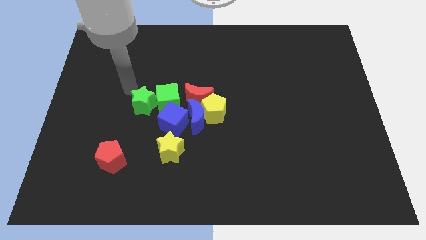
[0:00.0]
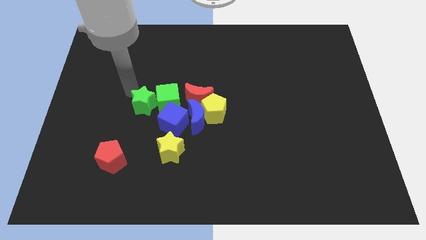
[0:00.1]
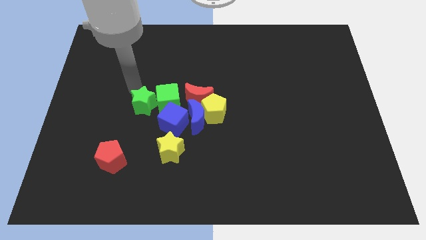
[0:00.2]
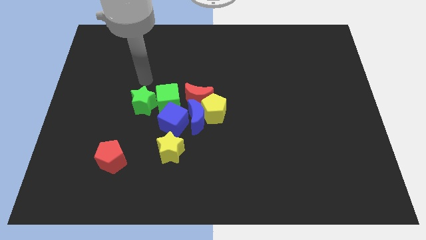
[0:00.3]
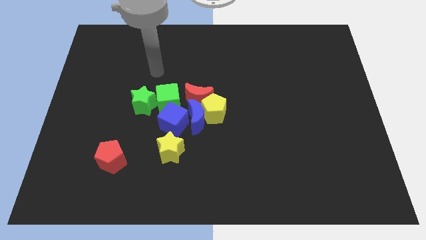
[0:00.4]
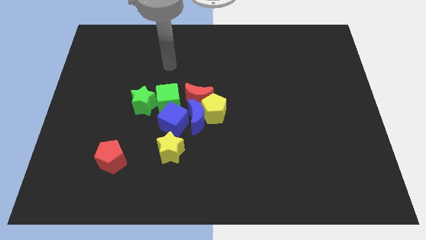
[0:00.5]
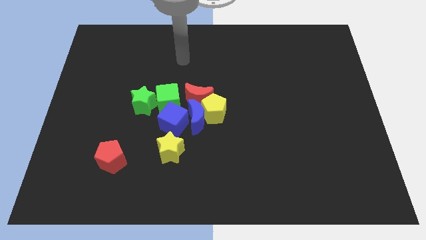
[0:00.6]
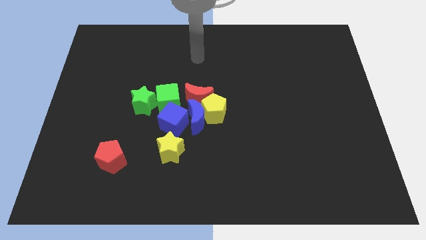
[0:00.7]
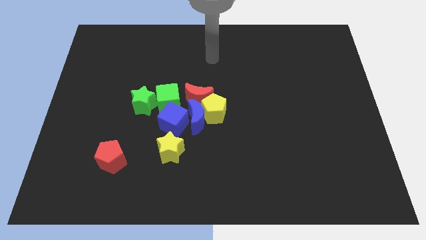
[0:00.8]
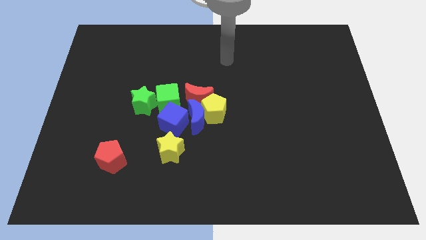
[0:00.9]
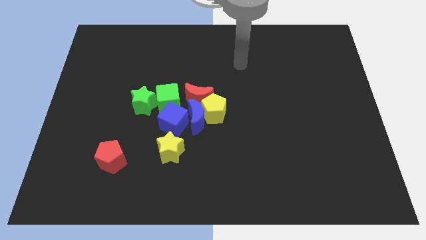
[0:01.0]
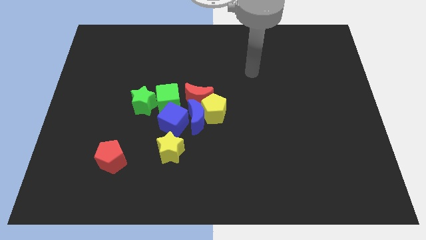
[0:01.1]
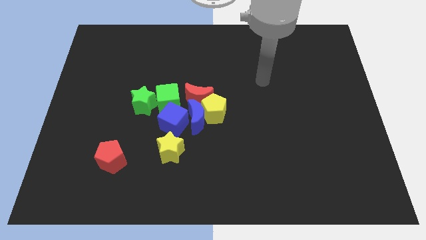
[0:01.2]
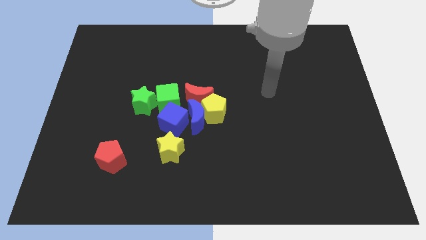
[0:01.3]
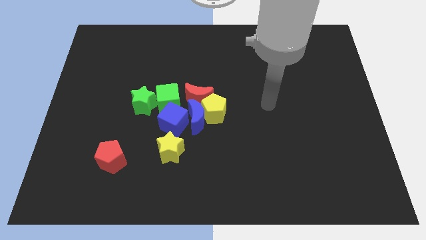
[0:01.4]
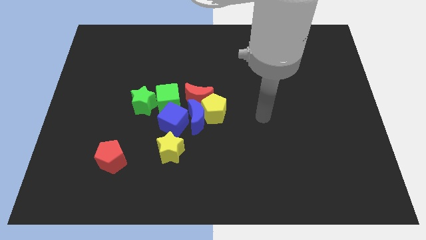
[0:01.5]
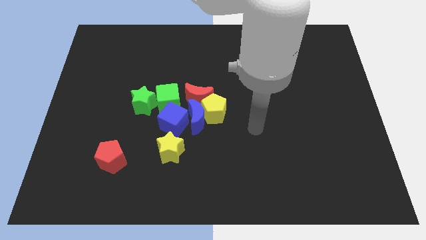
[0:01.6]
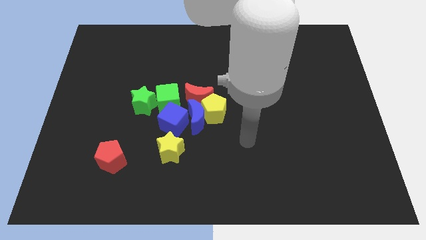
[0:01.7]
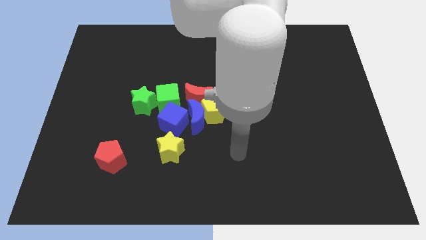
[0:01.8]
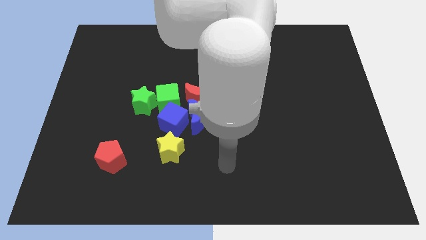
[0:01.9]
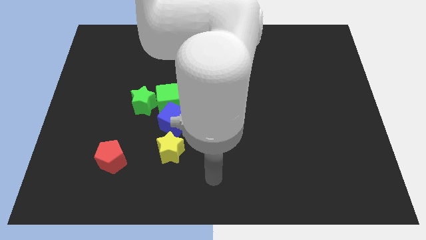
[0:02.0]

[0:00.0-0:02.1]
move your arm towards the bottom center of the board

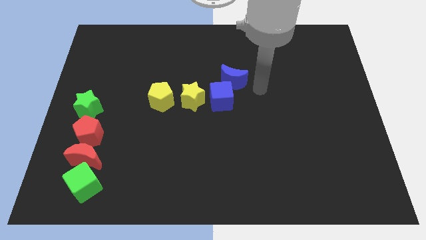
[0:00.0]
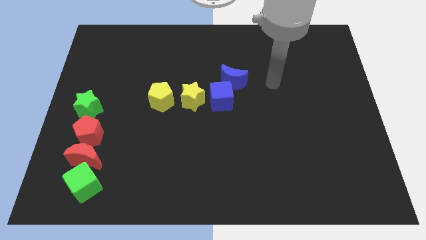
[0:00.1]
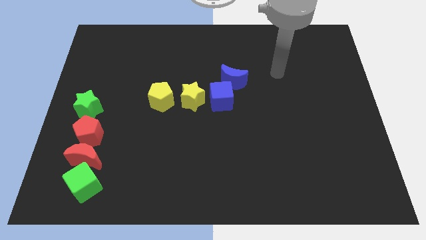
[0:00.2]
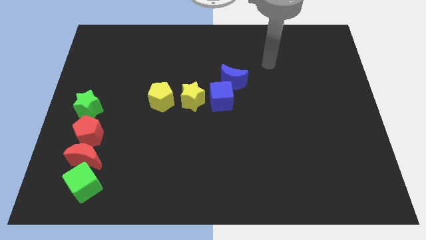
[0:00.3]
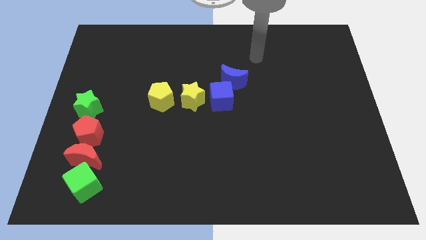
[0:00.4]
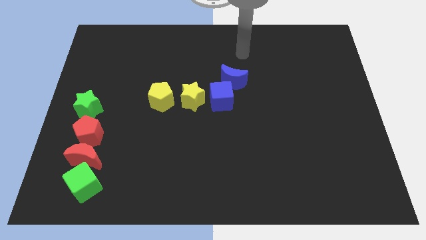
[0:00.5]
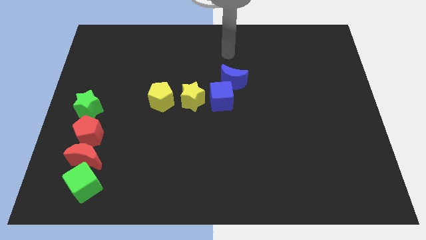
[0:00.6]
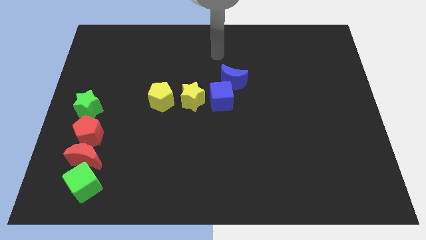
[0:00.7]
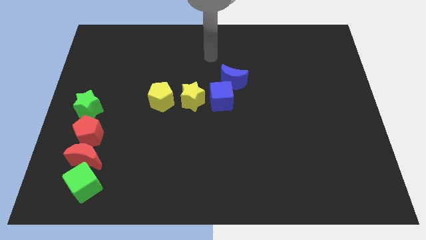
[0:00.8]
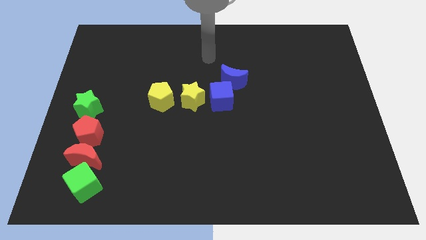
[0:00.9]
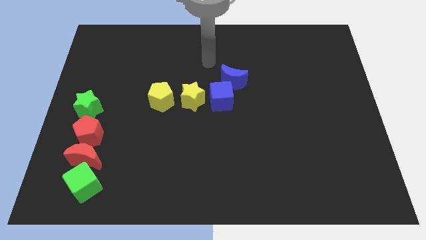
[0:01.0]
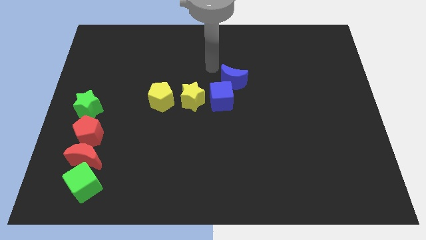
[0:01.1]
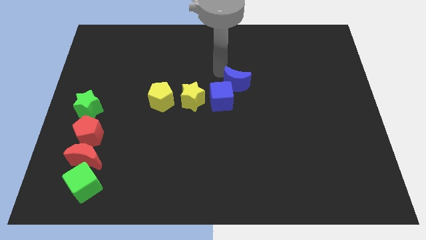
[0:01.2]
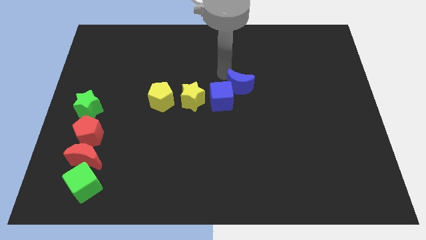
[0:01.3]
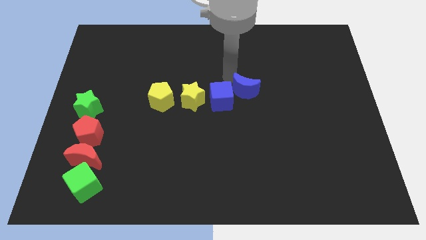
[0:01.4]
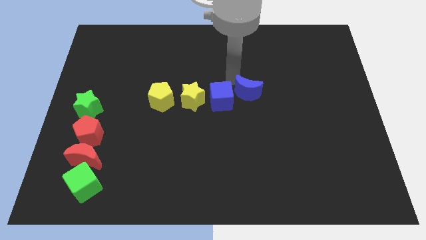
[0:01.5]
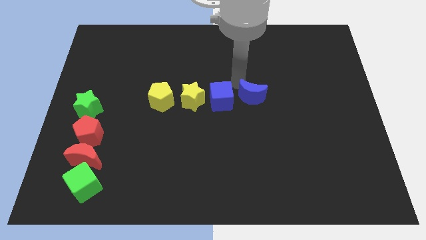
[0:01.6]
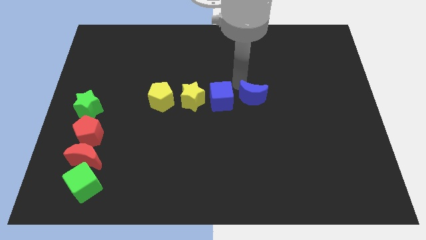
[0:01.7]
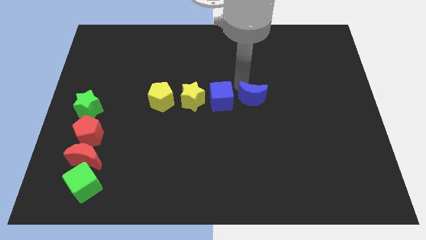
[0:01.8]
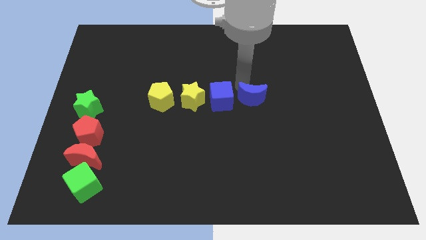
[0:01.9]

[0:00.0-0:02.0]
put the blue crescent on the right side of the blue cube

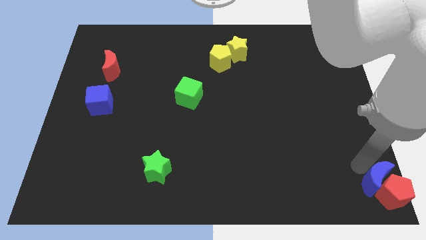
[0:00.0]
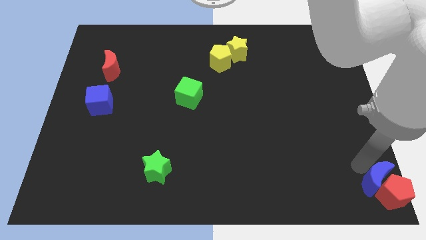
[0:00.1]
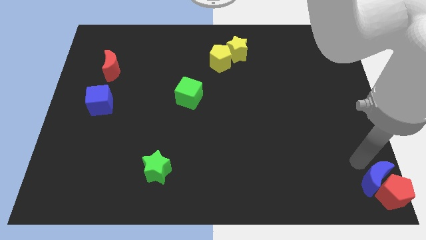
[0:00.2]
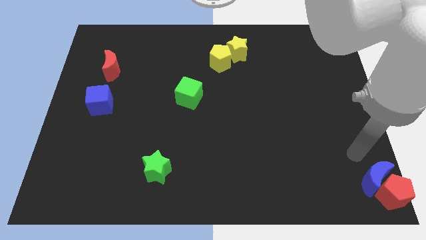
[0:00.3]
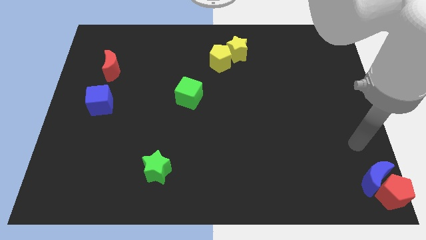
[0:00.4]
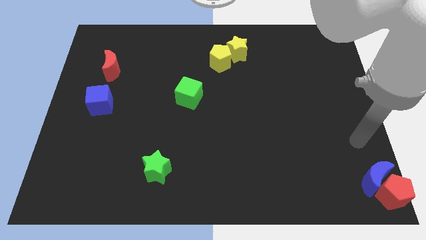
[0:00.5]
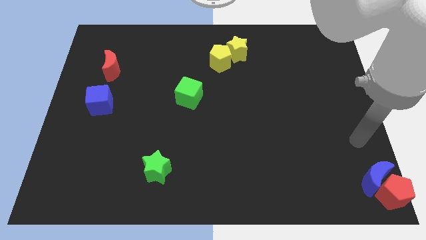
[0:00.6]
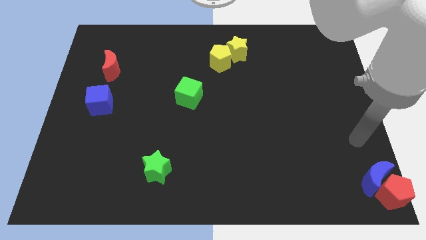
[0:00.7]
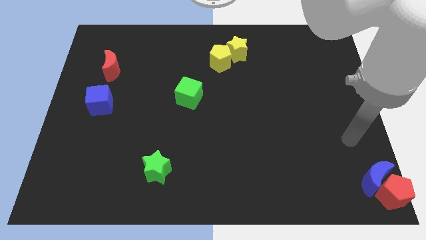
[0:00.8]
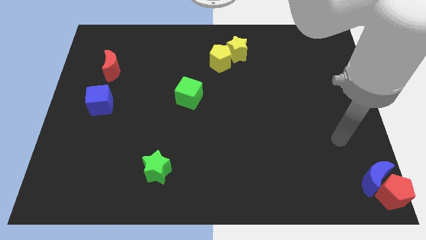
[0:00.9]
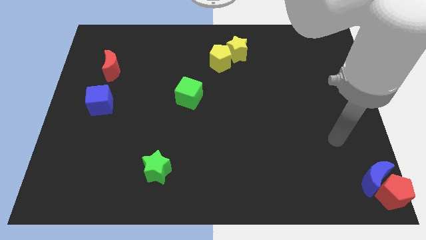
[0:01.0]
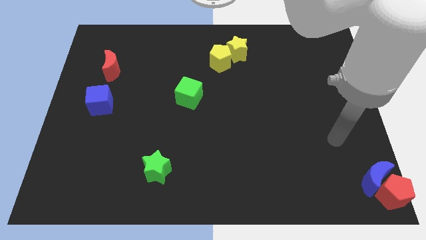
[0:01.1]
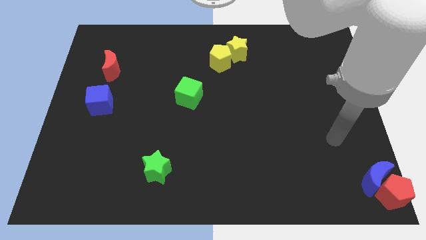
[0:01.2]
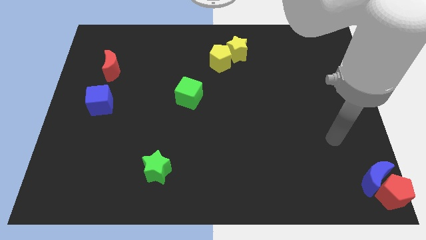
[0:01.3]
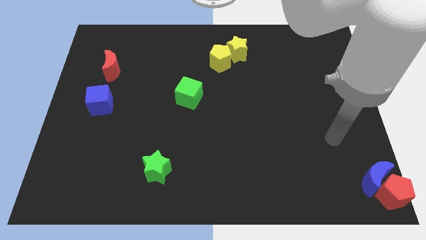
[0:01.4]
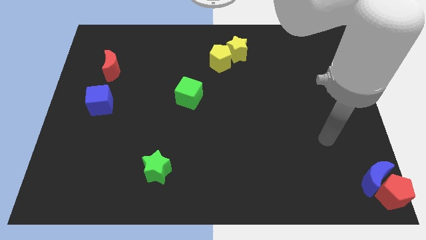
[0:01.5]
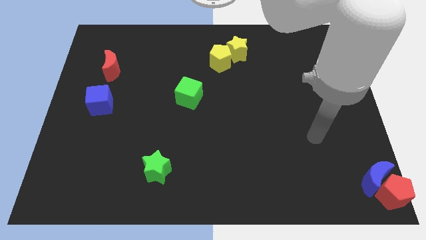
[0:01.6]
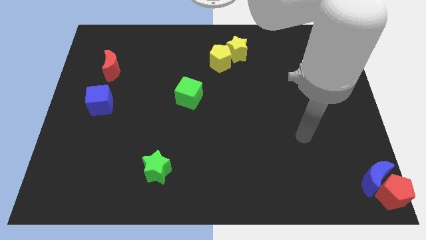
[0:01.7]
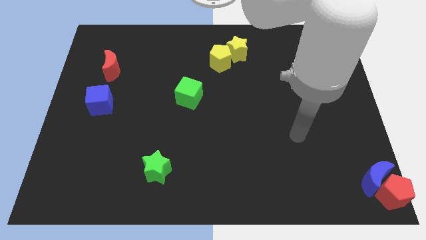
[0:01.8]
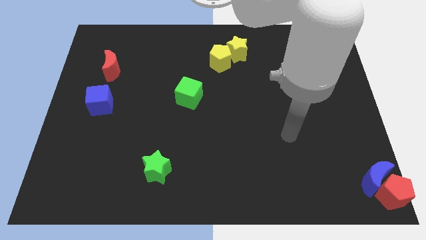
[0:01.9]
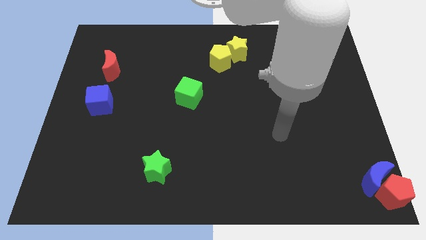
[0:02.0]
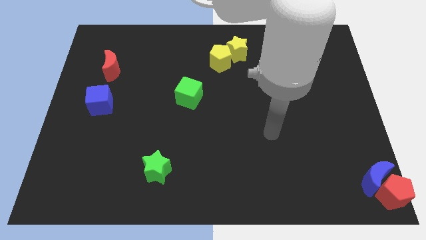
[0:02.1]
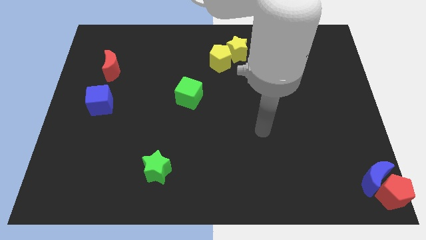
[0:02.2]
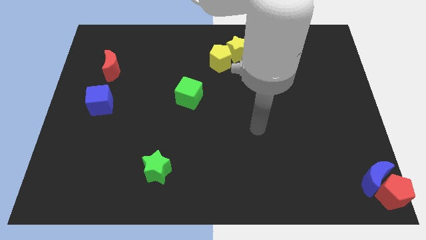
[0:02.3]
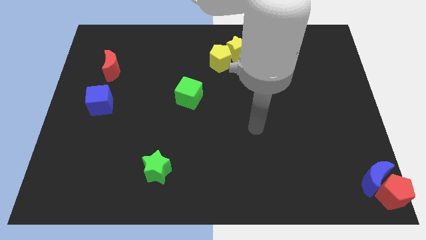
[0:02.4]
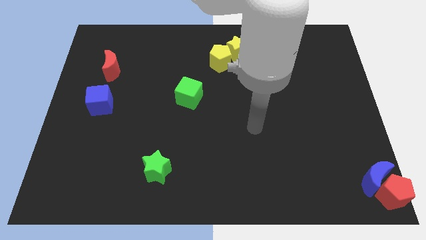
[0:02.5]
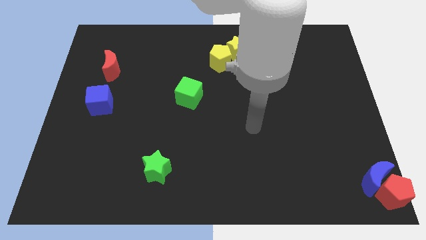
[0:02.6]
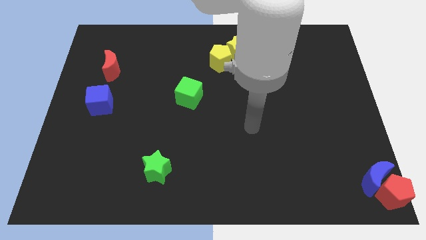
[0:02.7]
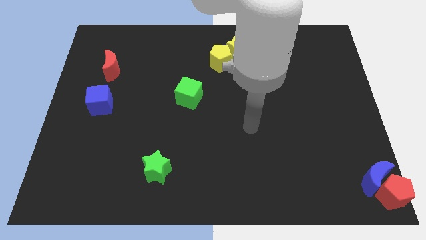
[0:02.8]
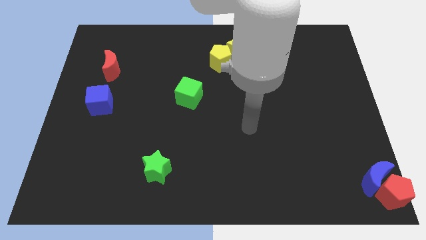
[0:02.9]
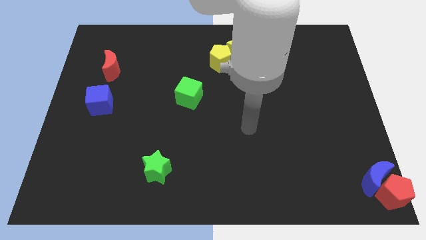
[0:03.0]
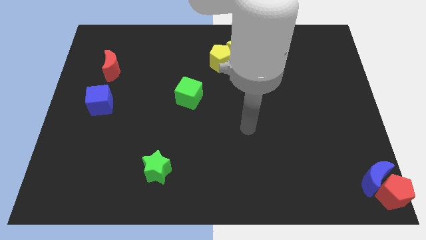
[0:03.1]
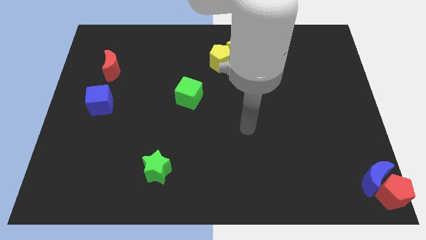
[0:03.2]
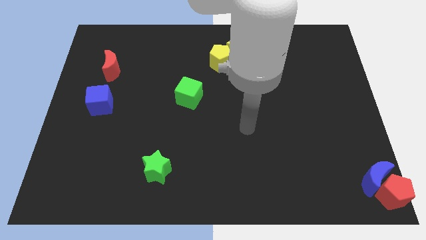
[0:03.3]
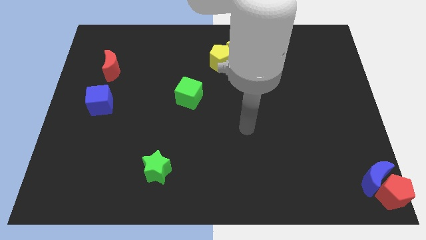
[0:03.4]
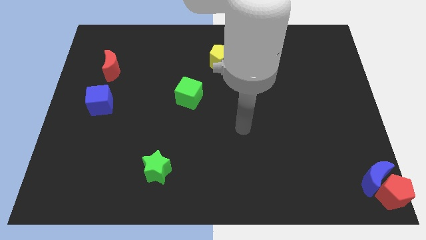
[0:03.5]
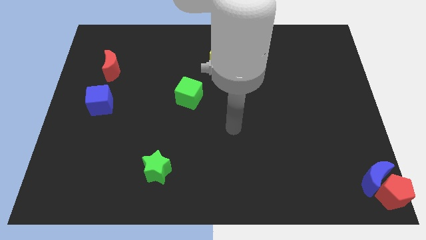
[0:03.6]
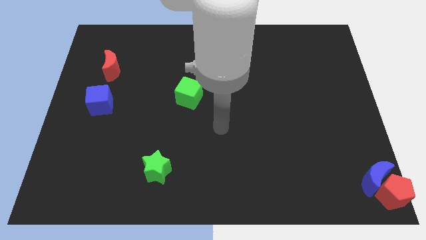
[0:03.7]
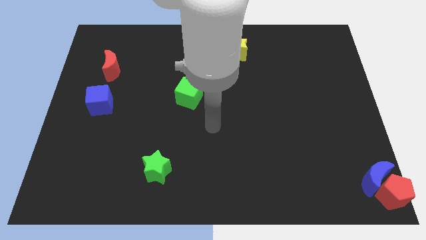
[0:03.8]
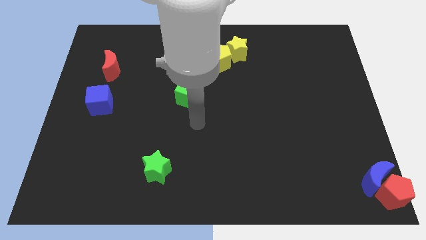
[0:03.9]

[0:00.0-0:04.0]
go away from the blue moon

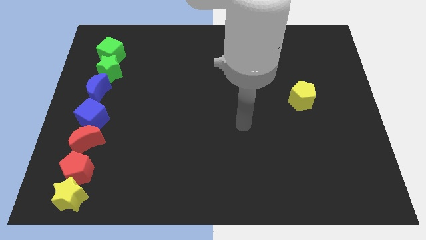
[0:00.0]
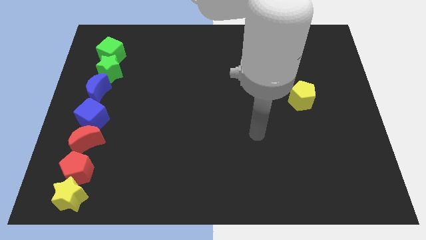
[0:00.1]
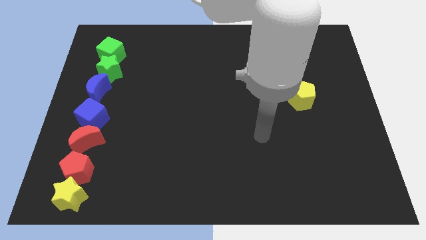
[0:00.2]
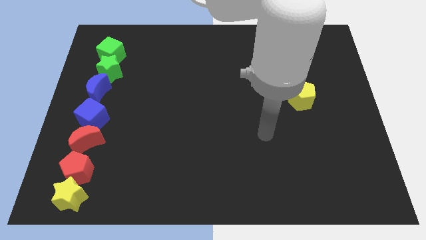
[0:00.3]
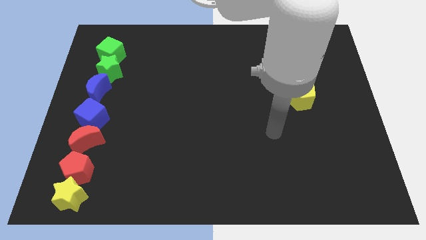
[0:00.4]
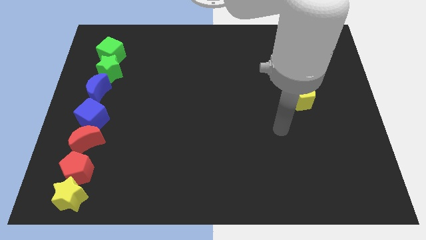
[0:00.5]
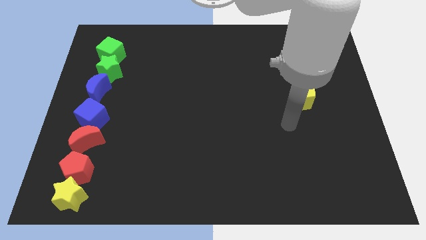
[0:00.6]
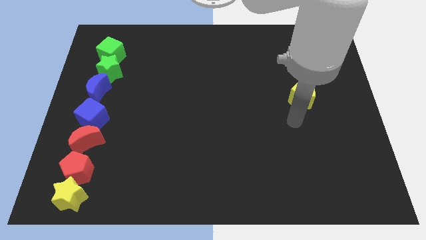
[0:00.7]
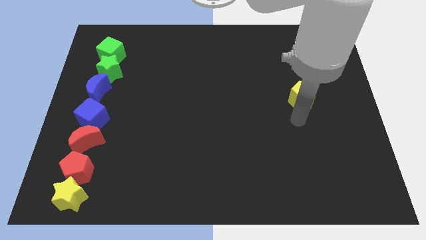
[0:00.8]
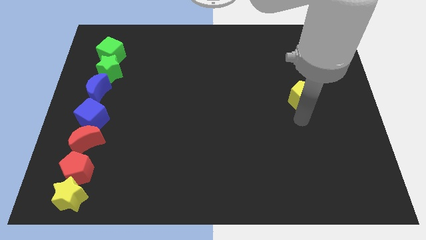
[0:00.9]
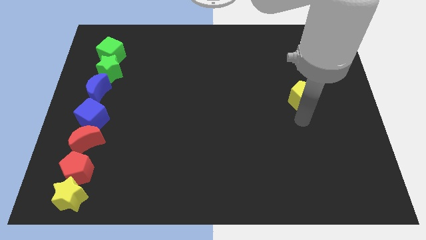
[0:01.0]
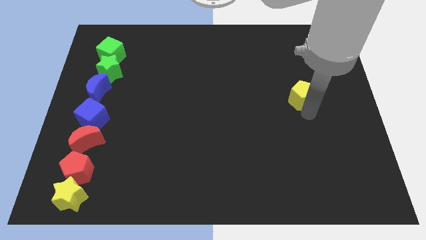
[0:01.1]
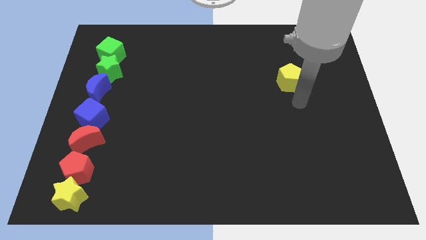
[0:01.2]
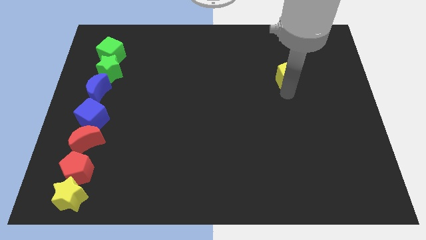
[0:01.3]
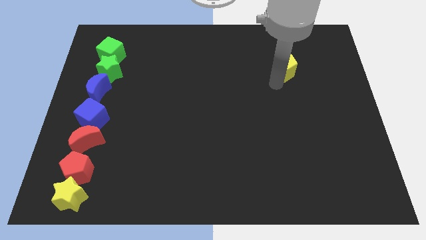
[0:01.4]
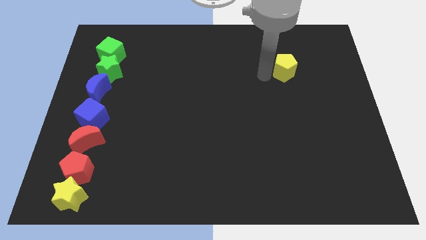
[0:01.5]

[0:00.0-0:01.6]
move the yellow pentagon slightly upwards
